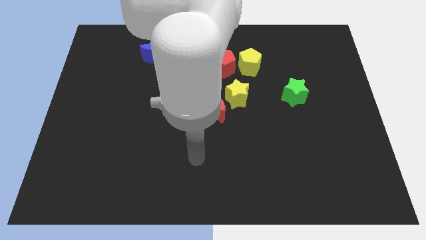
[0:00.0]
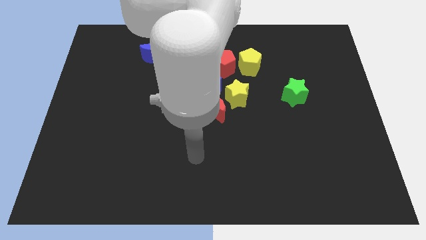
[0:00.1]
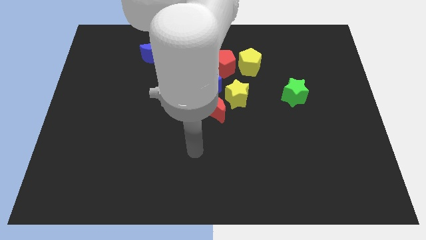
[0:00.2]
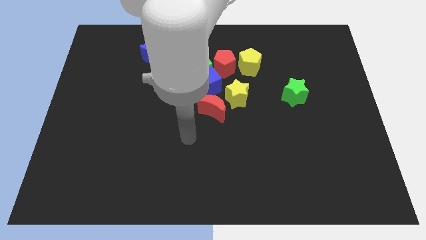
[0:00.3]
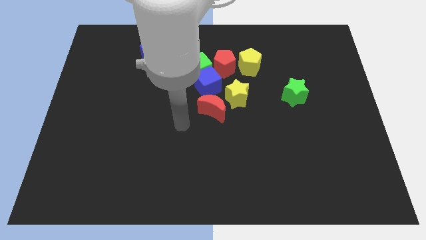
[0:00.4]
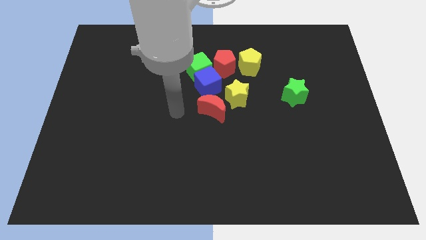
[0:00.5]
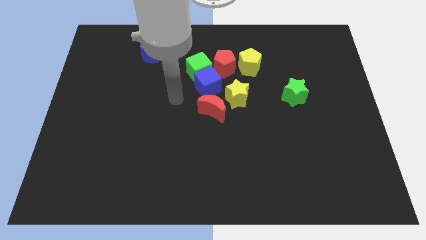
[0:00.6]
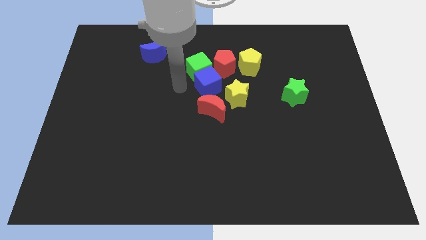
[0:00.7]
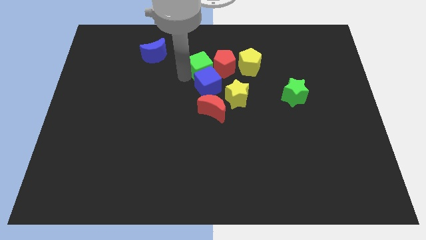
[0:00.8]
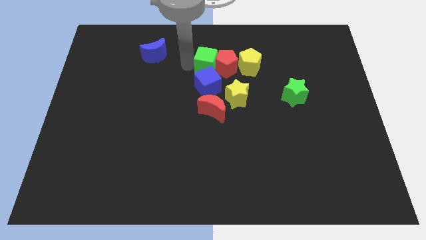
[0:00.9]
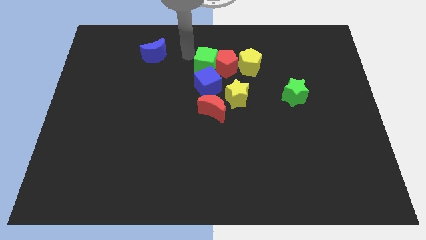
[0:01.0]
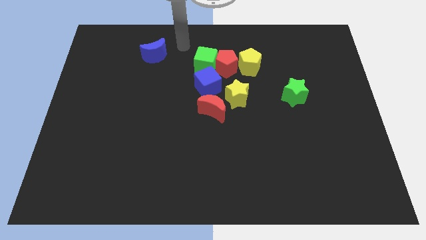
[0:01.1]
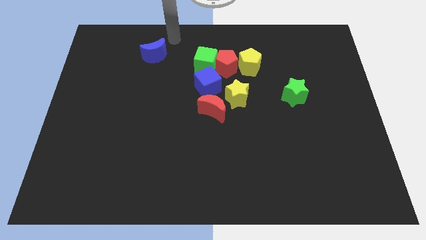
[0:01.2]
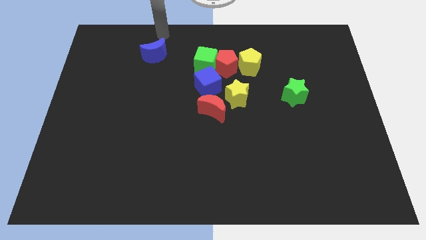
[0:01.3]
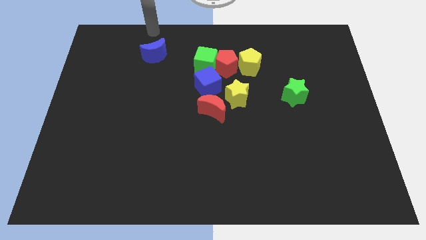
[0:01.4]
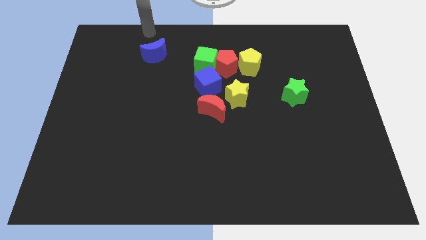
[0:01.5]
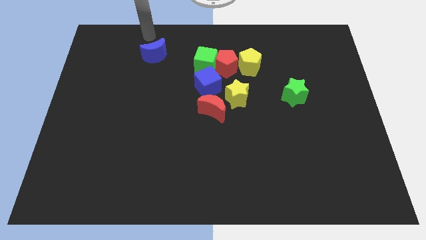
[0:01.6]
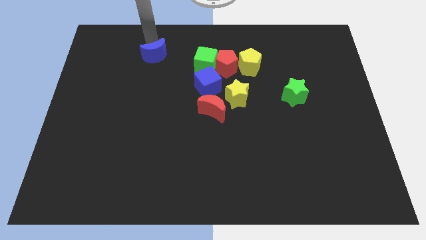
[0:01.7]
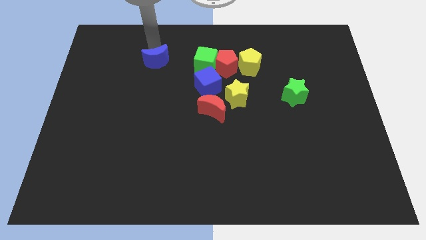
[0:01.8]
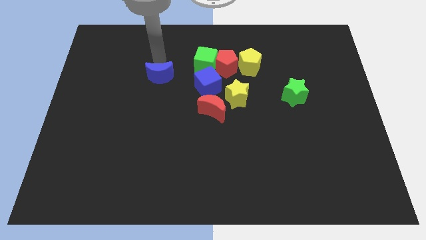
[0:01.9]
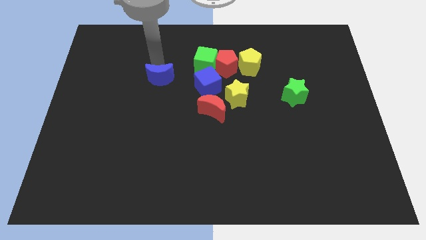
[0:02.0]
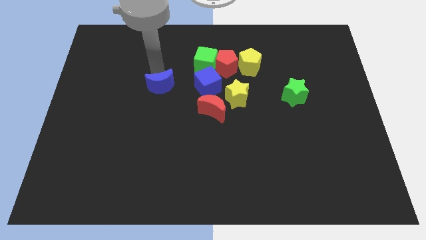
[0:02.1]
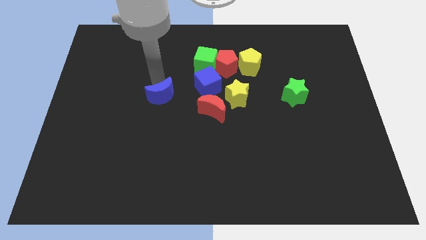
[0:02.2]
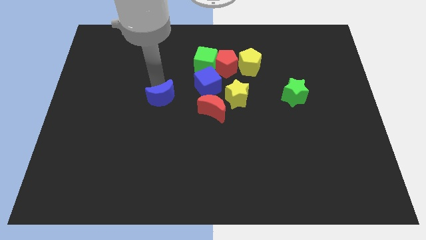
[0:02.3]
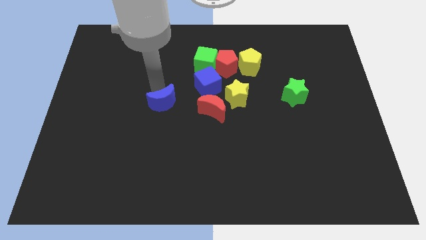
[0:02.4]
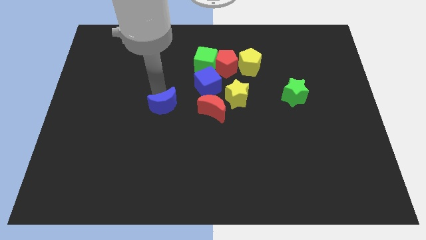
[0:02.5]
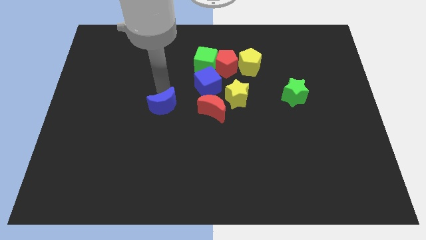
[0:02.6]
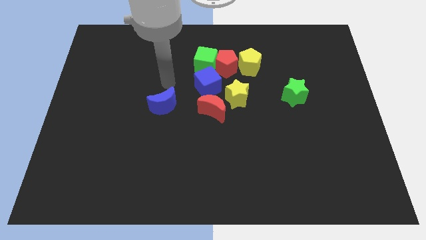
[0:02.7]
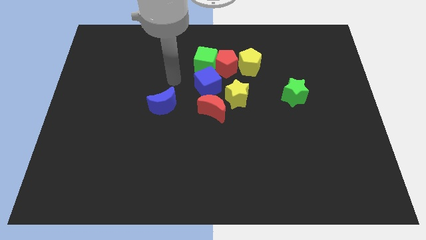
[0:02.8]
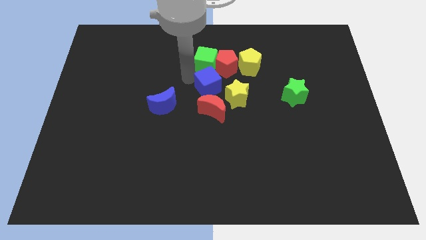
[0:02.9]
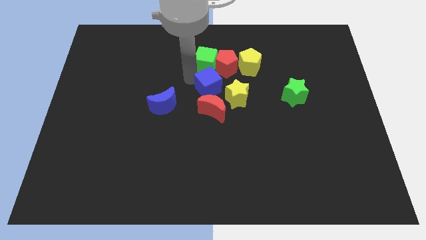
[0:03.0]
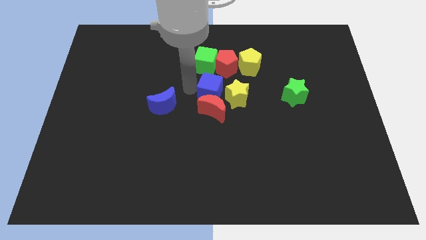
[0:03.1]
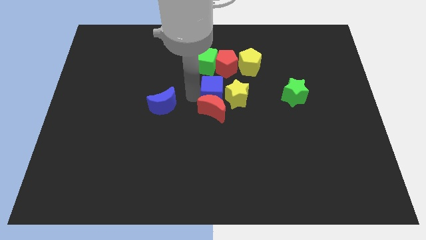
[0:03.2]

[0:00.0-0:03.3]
place the blue moon to the left of the red moon

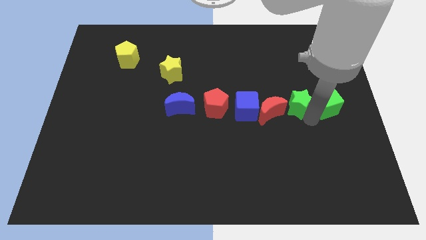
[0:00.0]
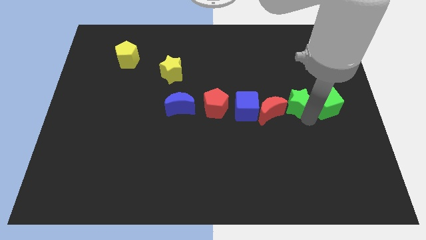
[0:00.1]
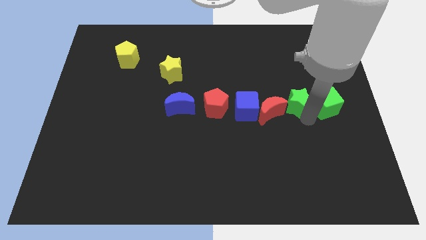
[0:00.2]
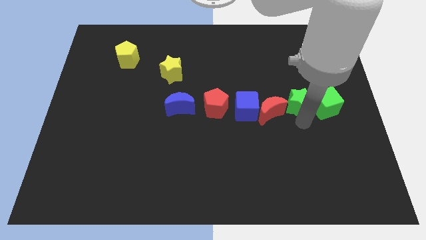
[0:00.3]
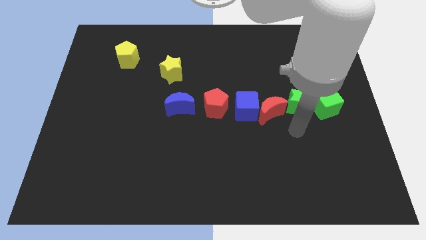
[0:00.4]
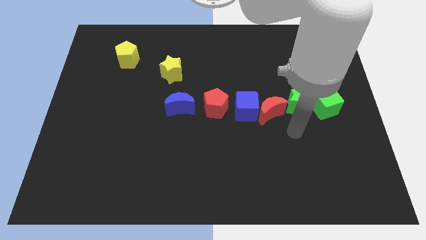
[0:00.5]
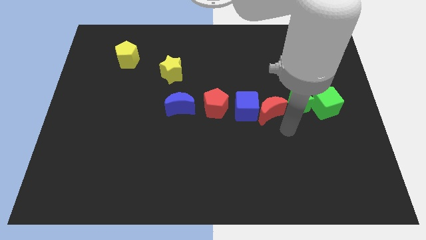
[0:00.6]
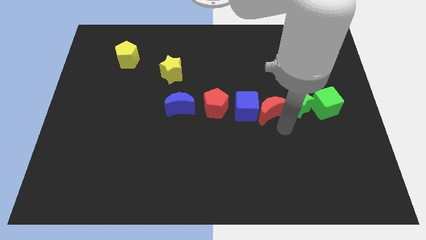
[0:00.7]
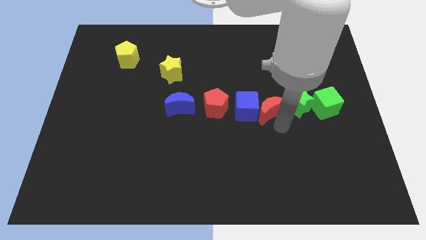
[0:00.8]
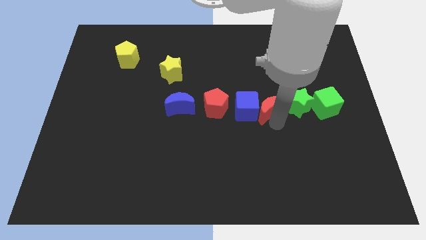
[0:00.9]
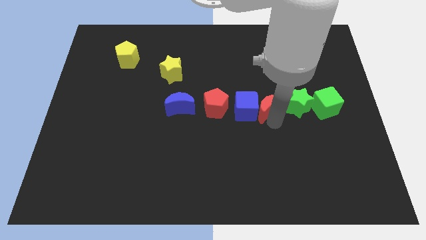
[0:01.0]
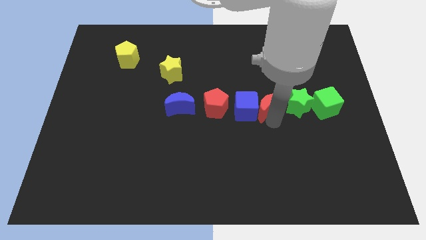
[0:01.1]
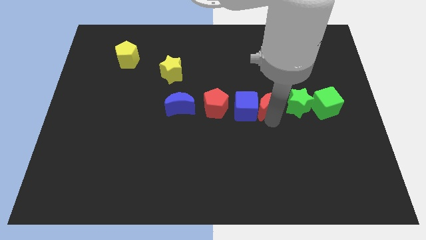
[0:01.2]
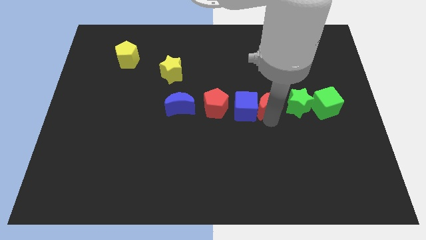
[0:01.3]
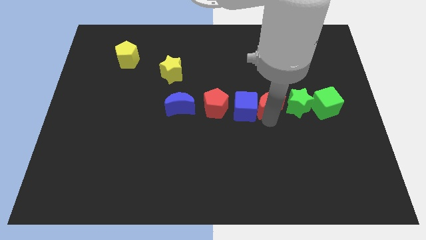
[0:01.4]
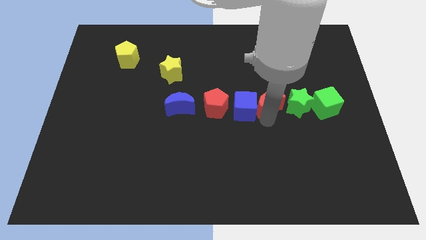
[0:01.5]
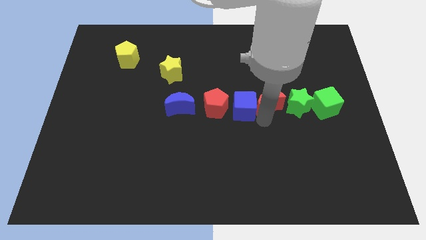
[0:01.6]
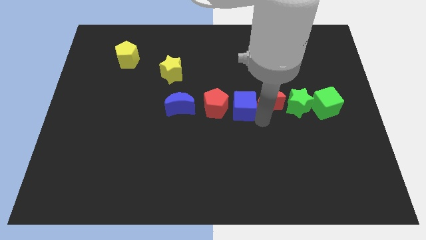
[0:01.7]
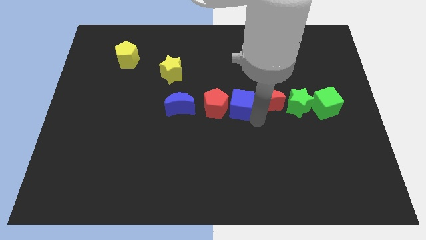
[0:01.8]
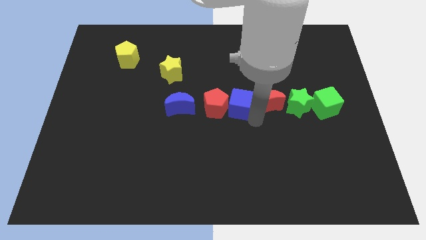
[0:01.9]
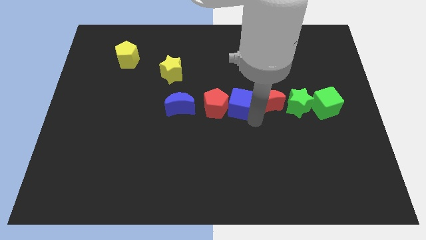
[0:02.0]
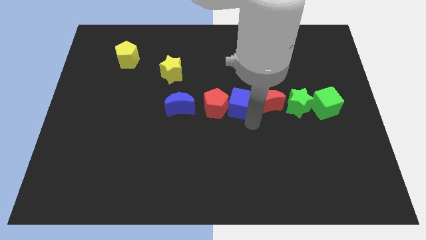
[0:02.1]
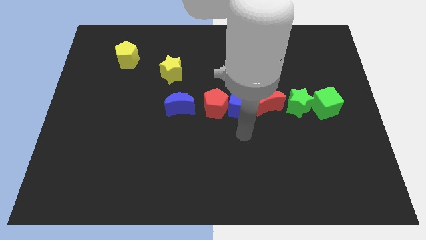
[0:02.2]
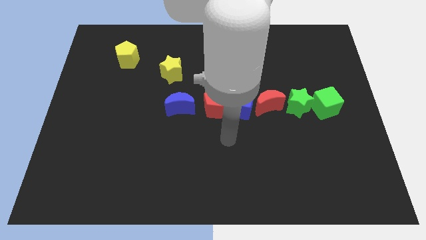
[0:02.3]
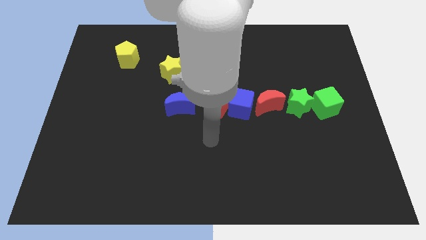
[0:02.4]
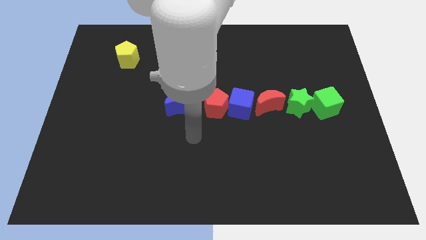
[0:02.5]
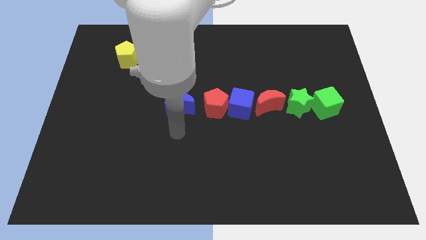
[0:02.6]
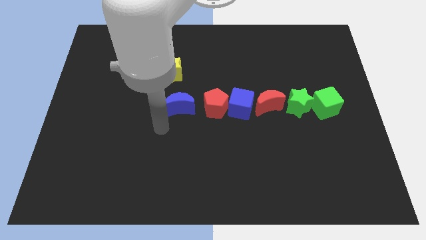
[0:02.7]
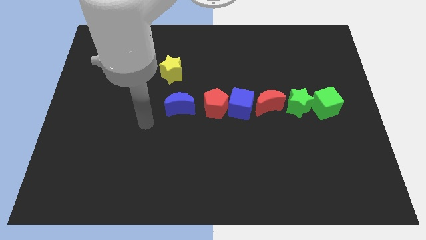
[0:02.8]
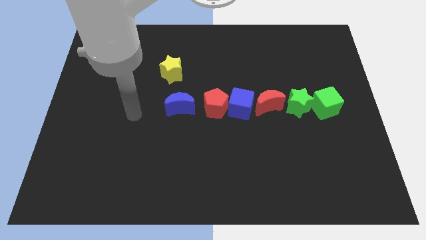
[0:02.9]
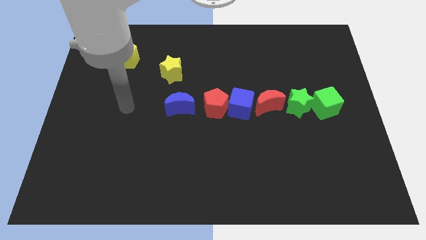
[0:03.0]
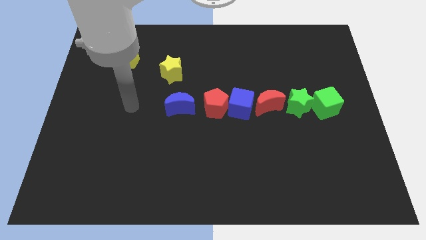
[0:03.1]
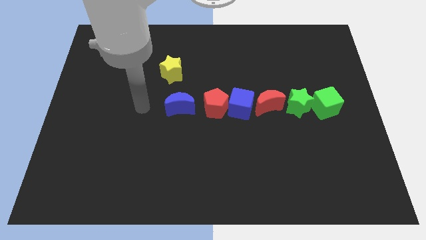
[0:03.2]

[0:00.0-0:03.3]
move slightly red crescent along with blue cube

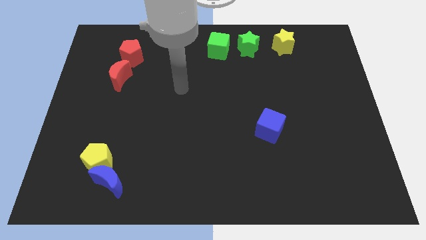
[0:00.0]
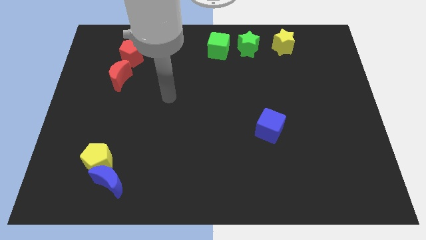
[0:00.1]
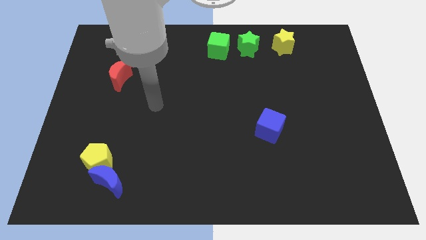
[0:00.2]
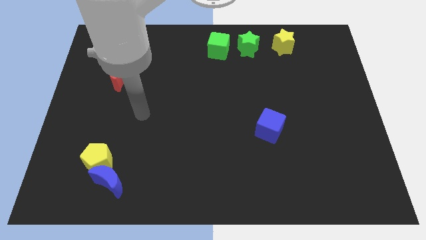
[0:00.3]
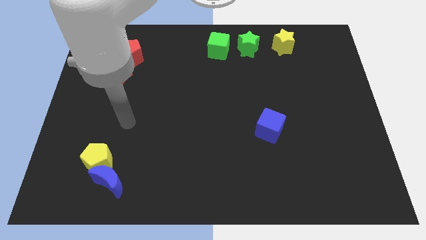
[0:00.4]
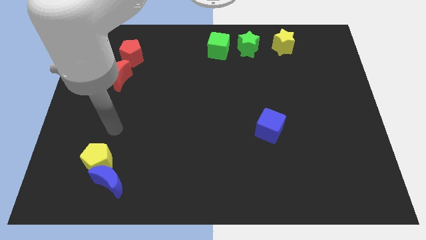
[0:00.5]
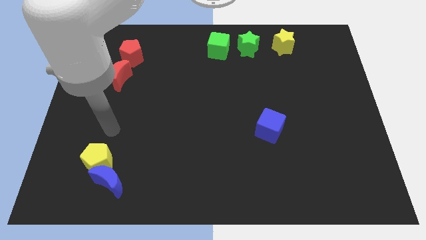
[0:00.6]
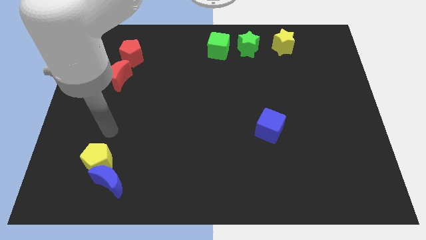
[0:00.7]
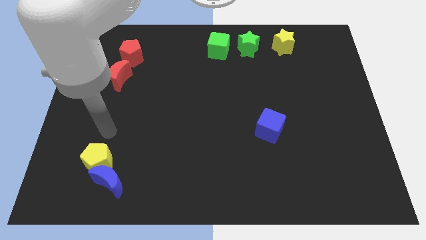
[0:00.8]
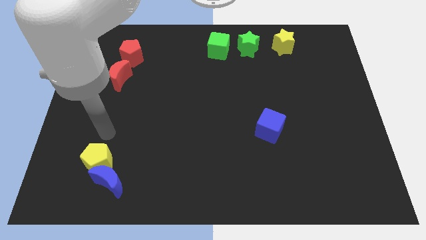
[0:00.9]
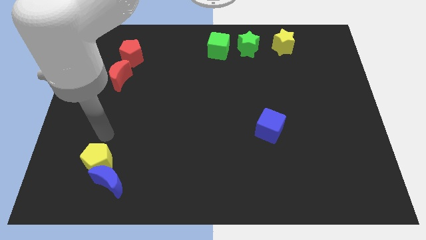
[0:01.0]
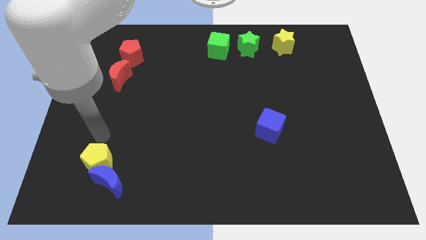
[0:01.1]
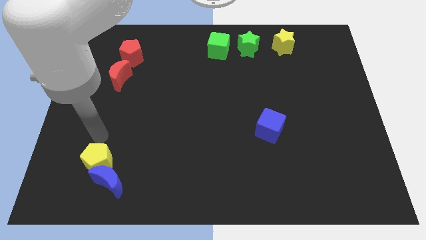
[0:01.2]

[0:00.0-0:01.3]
move the arm above the yellow pentagon

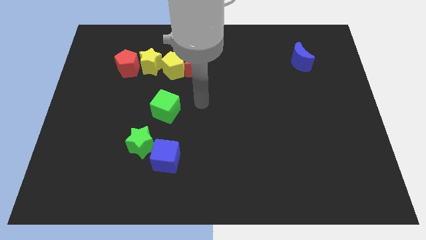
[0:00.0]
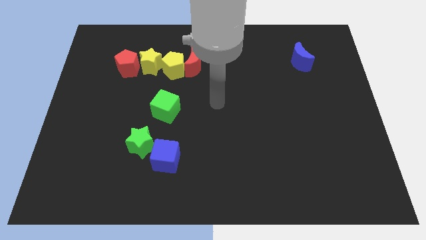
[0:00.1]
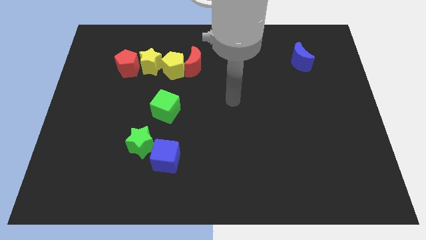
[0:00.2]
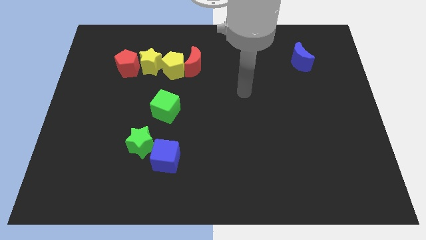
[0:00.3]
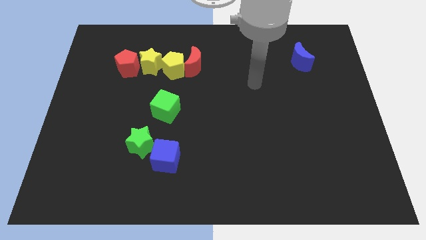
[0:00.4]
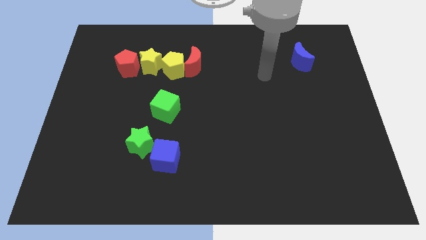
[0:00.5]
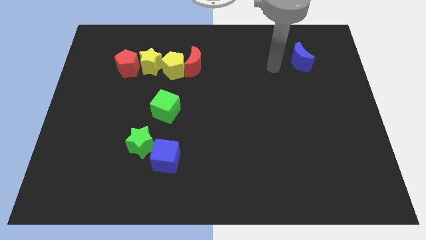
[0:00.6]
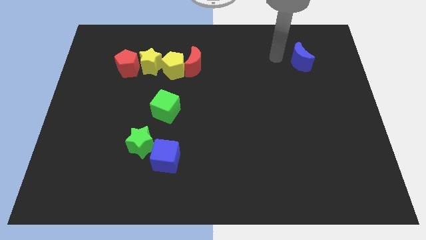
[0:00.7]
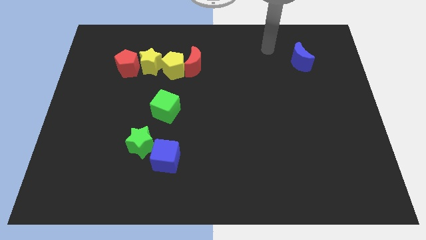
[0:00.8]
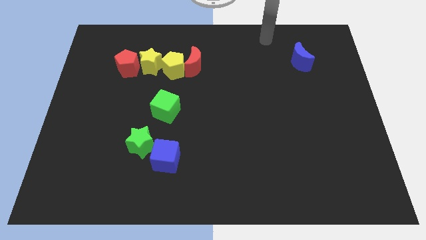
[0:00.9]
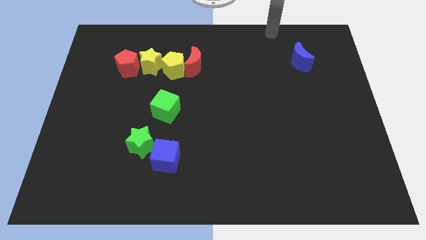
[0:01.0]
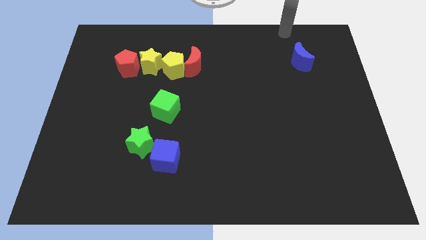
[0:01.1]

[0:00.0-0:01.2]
move your arm to the top of the blue crescent
